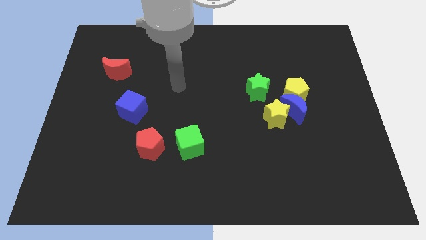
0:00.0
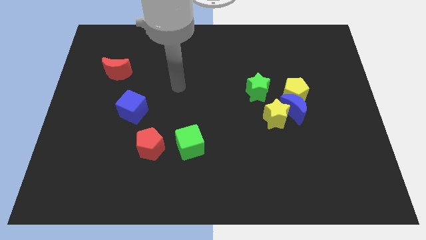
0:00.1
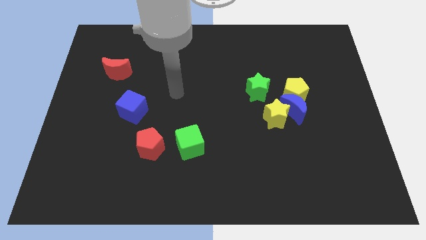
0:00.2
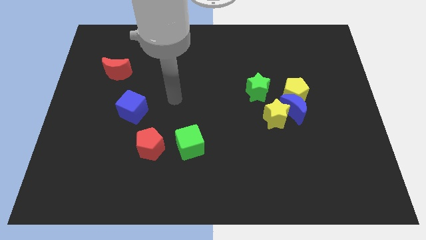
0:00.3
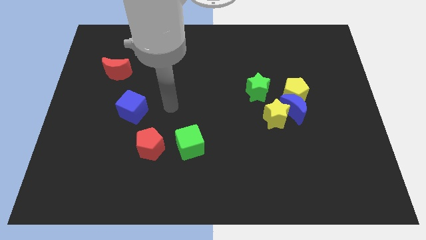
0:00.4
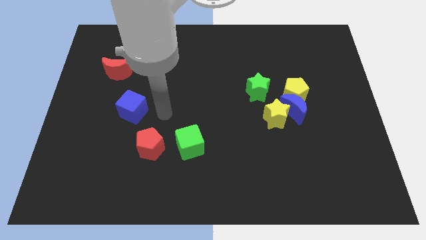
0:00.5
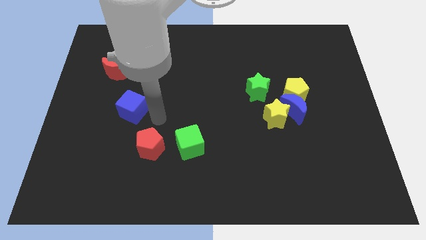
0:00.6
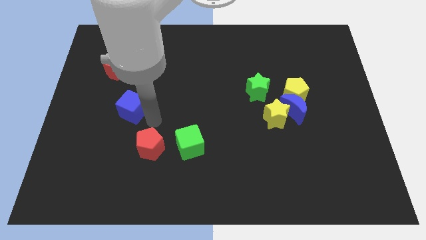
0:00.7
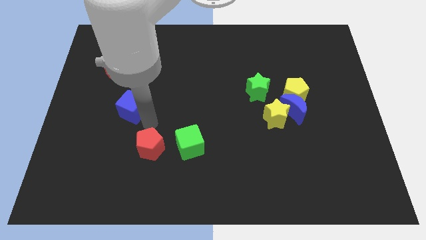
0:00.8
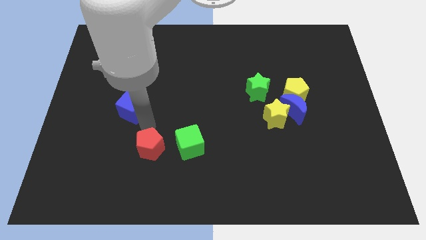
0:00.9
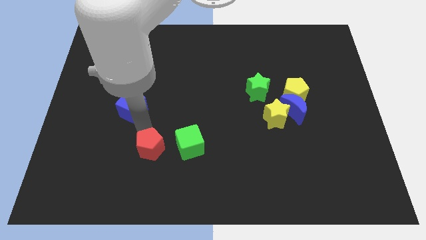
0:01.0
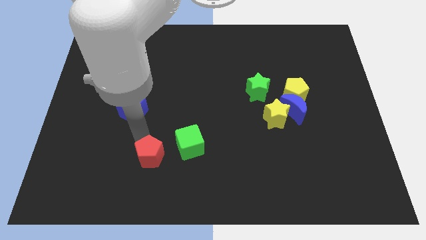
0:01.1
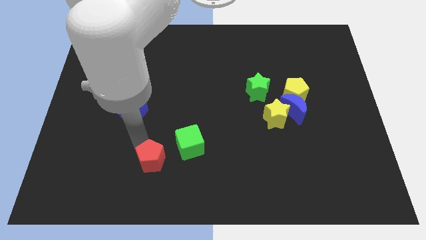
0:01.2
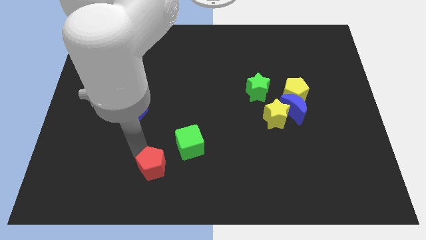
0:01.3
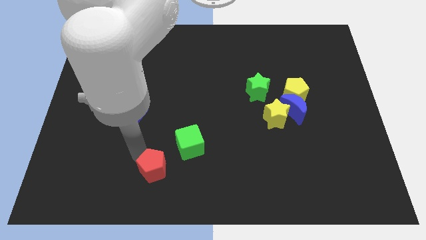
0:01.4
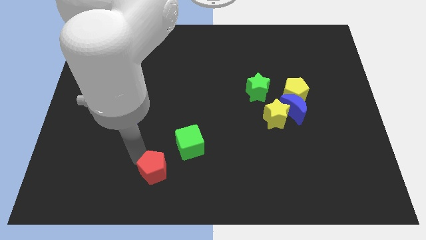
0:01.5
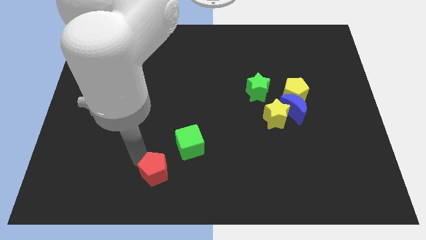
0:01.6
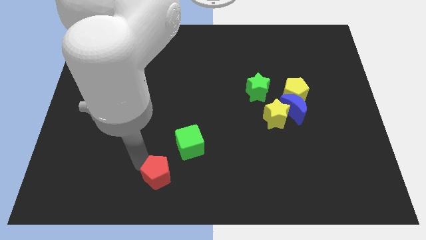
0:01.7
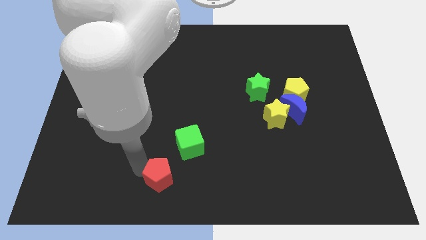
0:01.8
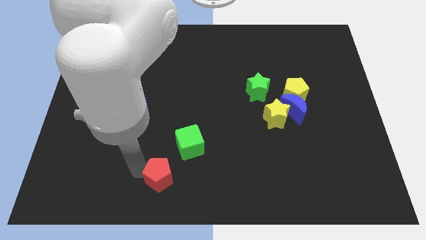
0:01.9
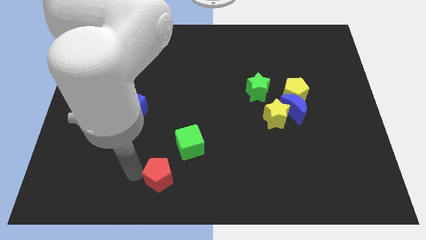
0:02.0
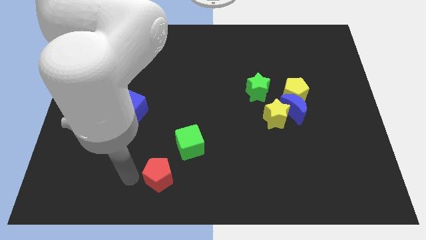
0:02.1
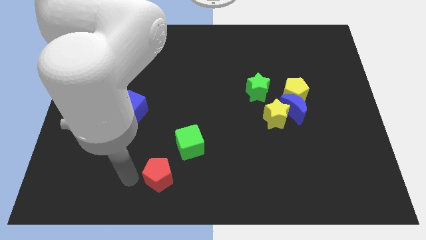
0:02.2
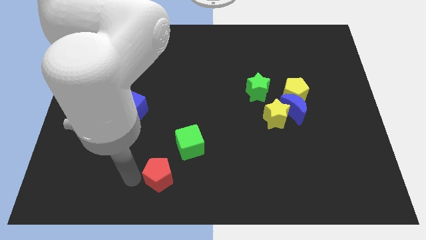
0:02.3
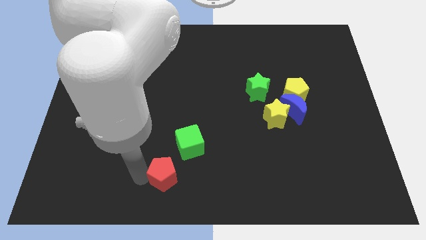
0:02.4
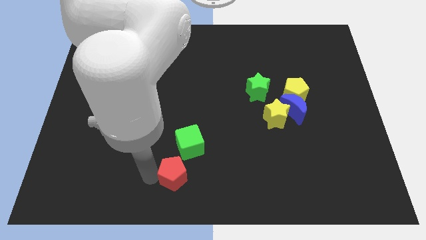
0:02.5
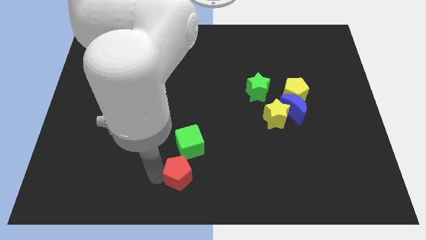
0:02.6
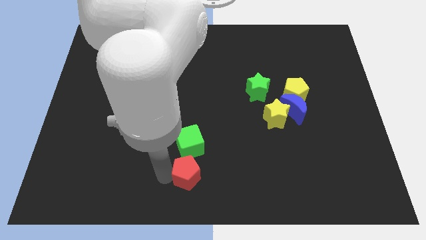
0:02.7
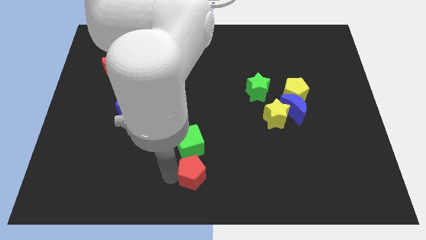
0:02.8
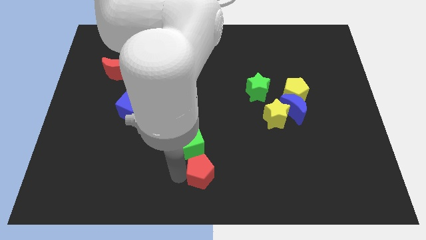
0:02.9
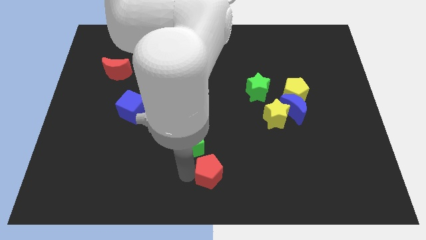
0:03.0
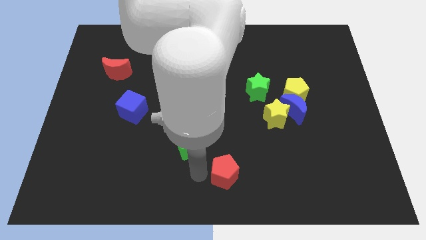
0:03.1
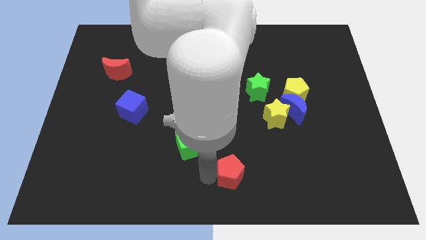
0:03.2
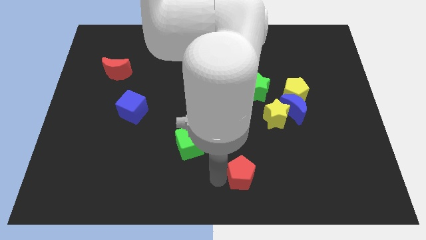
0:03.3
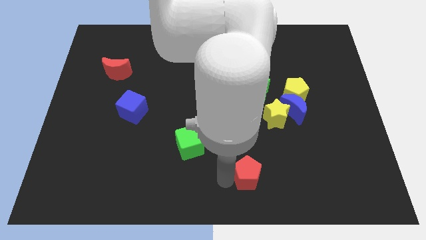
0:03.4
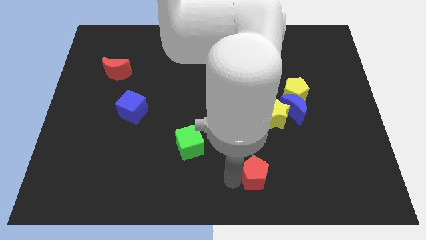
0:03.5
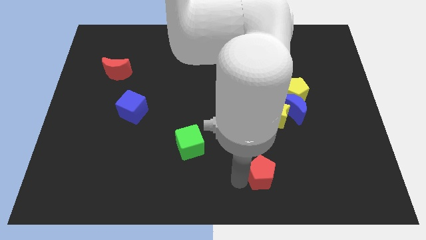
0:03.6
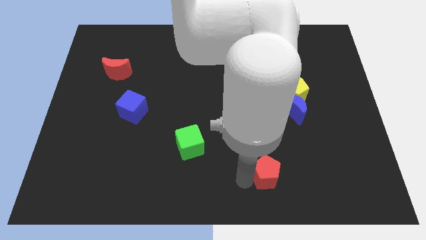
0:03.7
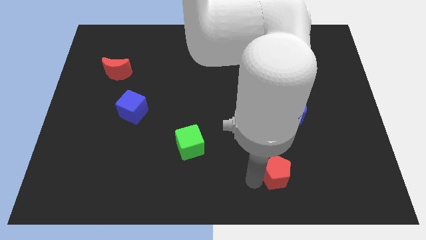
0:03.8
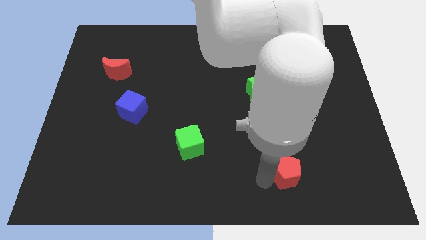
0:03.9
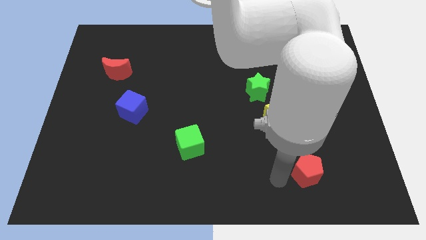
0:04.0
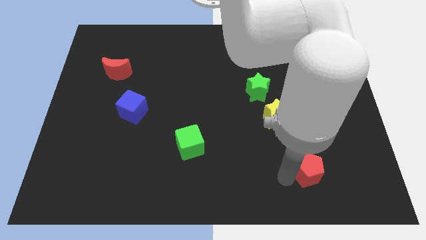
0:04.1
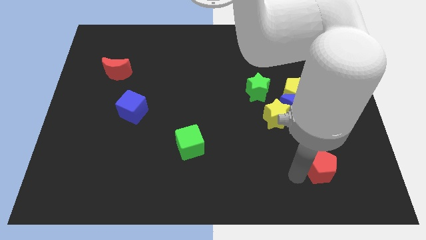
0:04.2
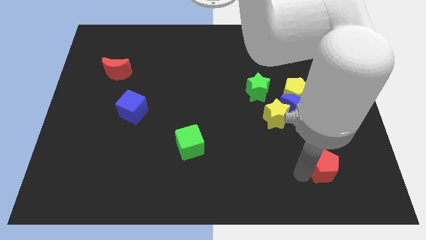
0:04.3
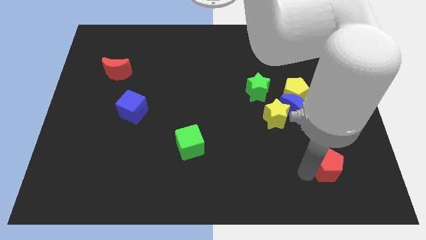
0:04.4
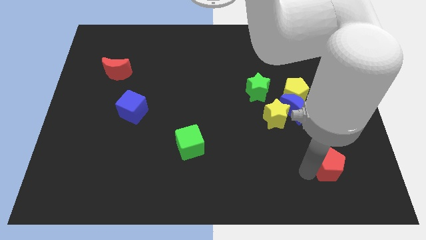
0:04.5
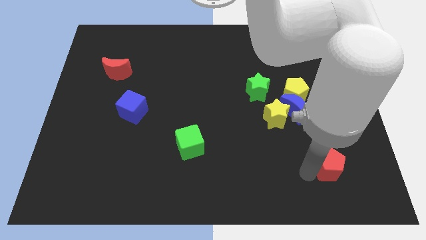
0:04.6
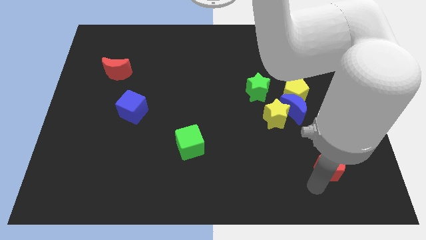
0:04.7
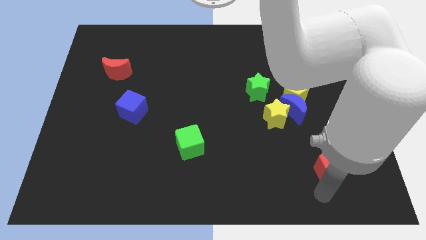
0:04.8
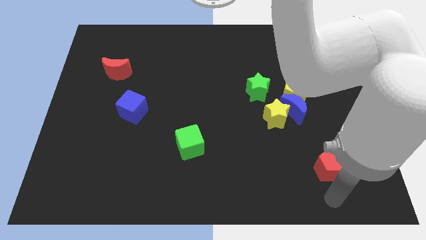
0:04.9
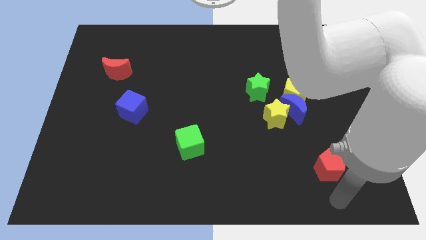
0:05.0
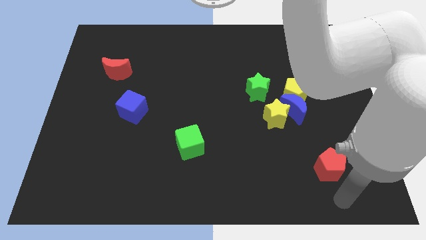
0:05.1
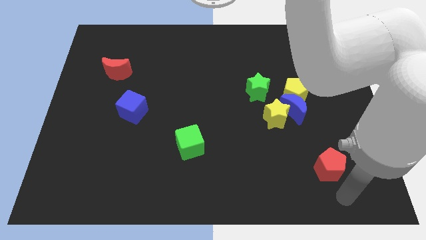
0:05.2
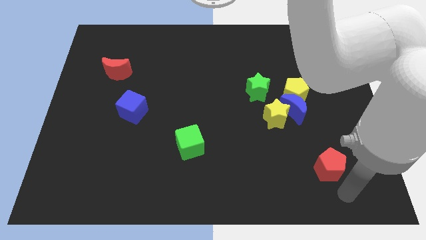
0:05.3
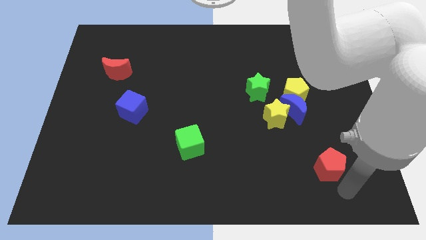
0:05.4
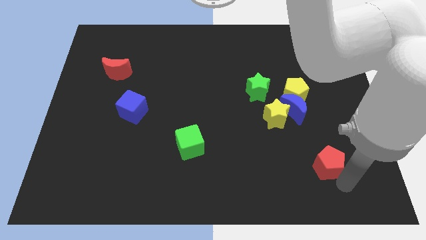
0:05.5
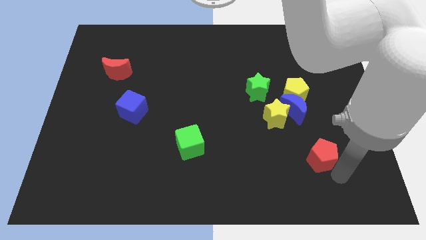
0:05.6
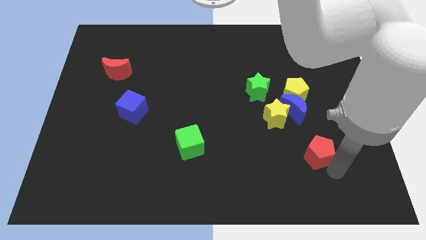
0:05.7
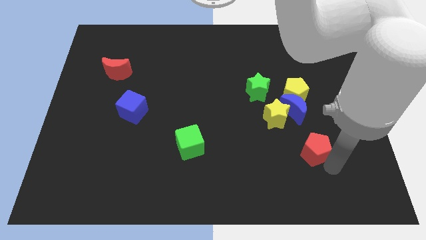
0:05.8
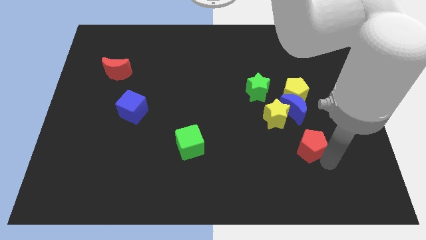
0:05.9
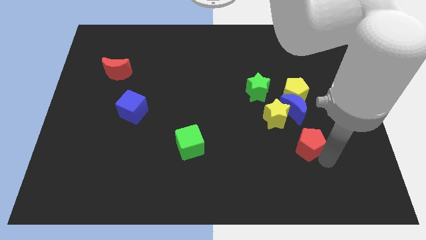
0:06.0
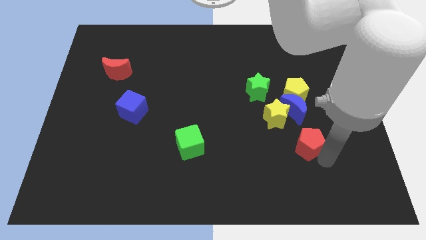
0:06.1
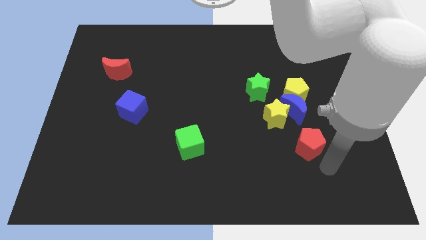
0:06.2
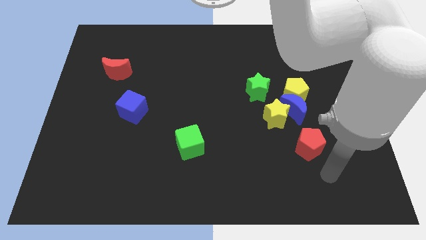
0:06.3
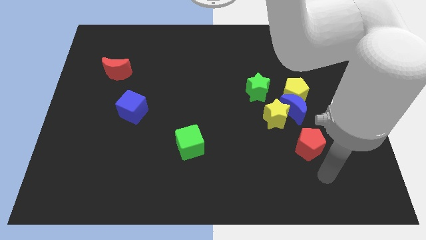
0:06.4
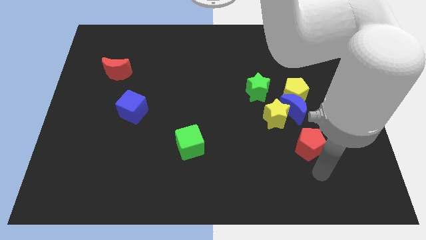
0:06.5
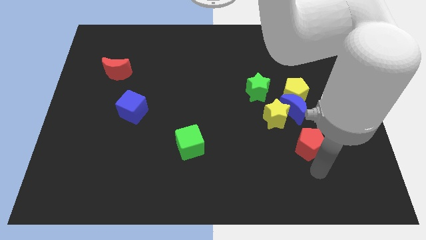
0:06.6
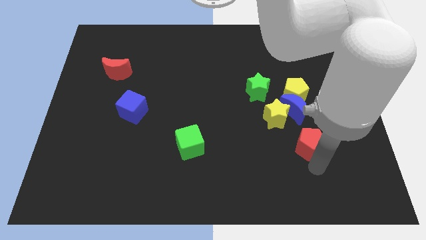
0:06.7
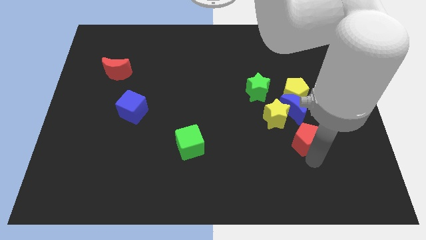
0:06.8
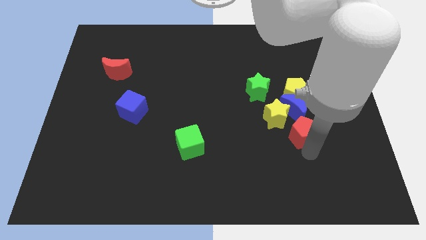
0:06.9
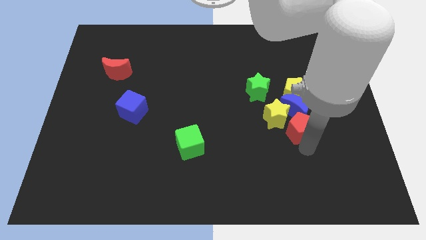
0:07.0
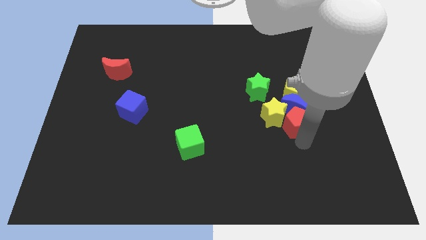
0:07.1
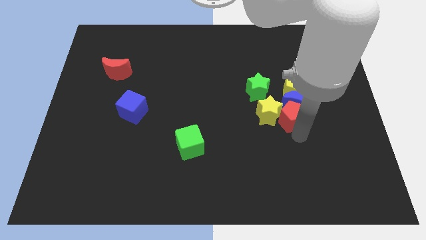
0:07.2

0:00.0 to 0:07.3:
put the red pentagon next to the blue moon

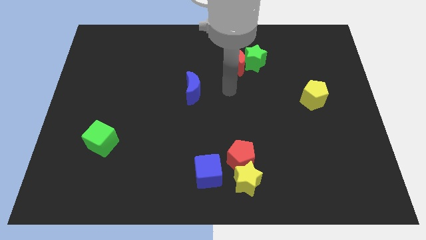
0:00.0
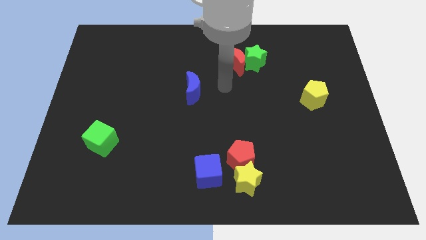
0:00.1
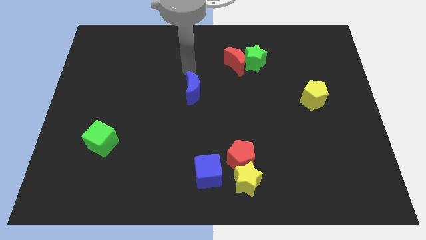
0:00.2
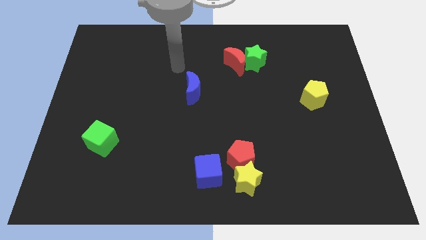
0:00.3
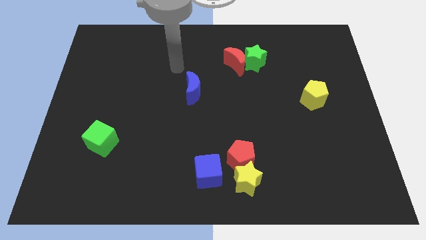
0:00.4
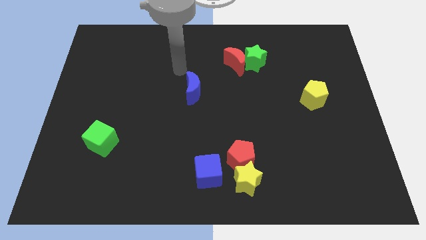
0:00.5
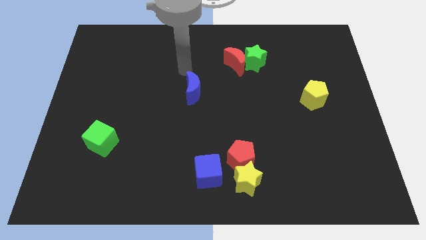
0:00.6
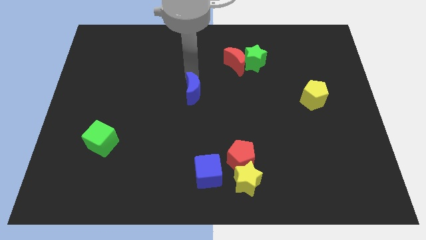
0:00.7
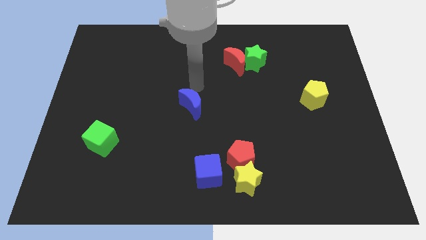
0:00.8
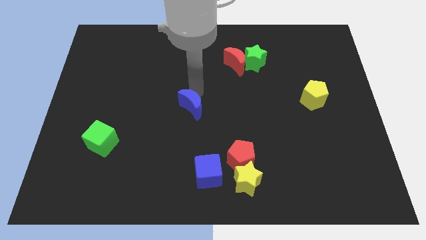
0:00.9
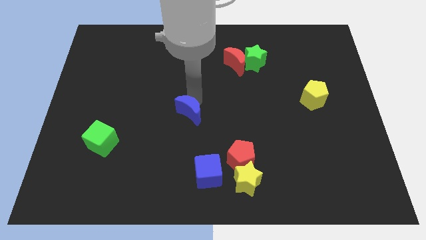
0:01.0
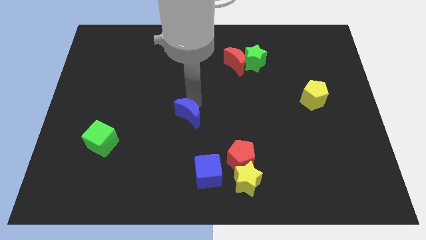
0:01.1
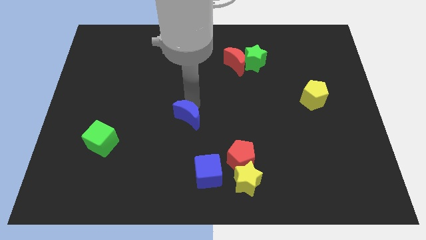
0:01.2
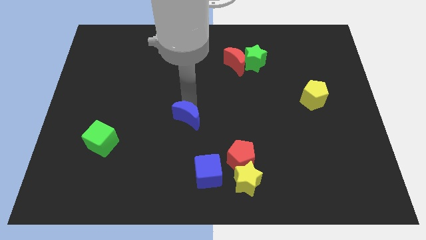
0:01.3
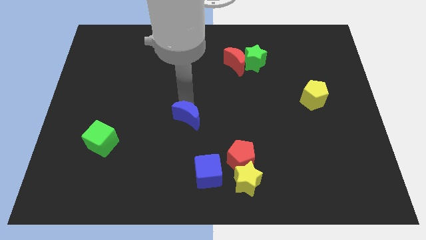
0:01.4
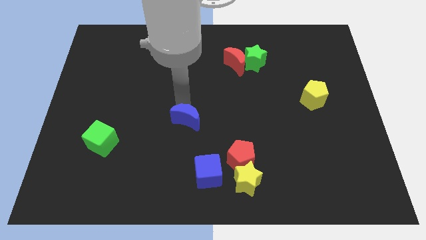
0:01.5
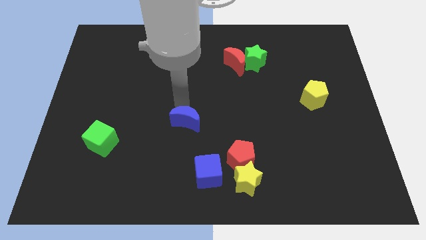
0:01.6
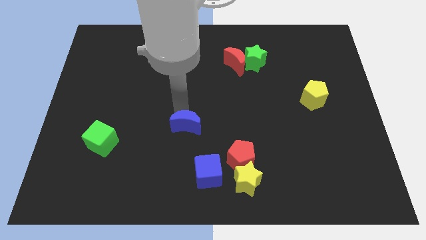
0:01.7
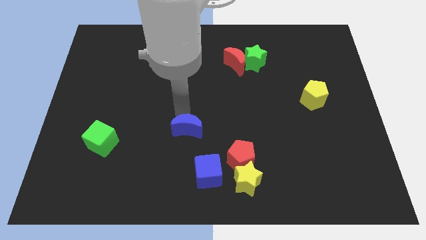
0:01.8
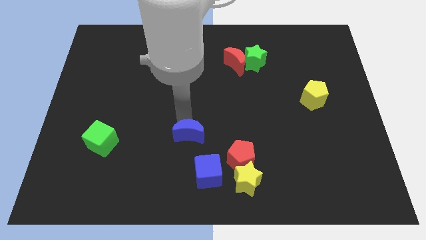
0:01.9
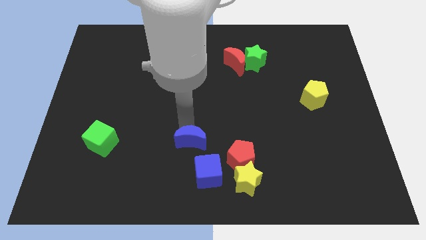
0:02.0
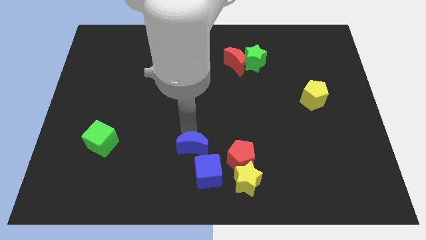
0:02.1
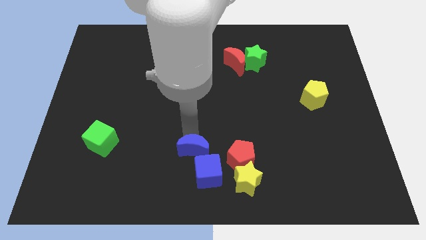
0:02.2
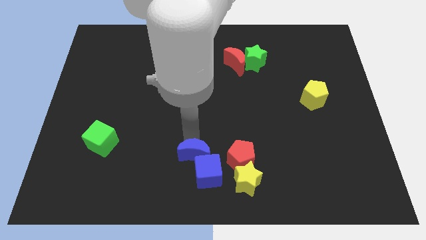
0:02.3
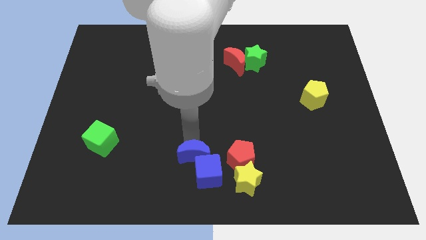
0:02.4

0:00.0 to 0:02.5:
move the blue moon close to the blue cube
